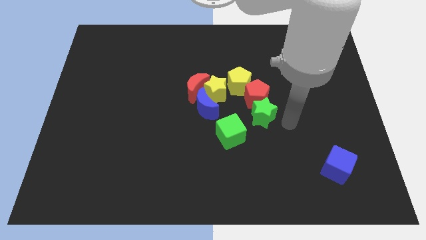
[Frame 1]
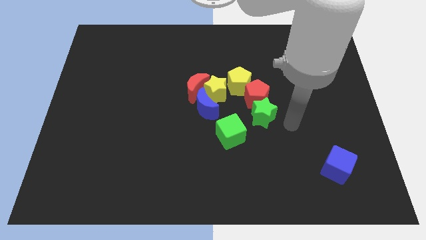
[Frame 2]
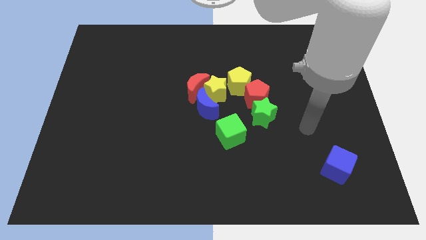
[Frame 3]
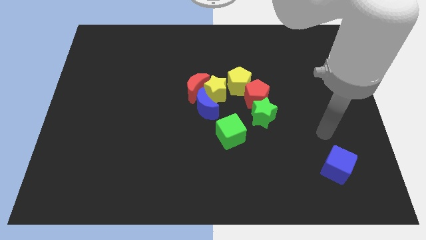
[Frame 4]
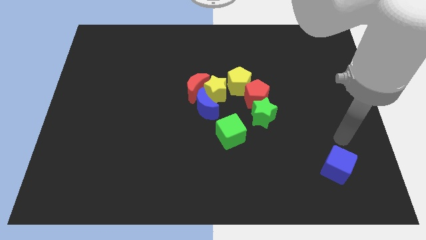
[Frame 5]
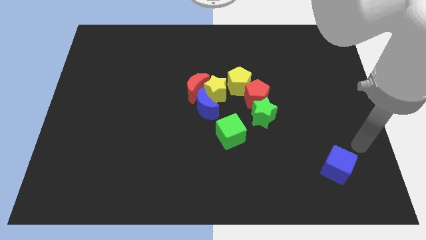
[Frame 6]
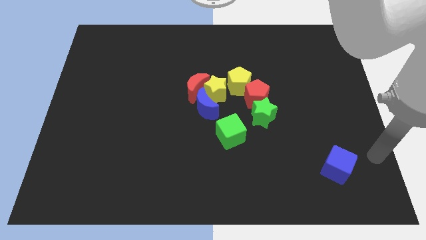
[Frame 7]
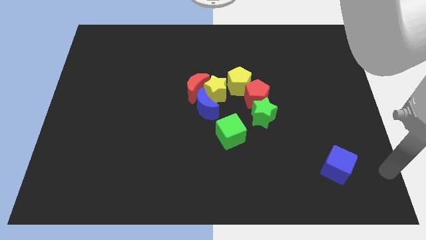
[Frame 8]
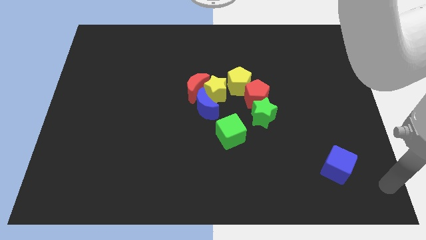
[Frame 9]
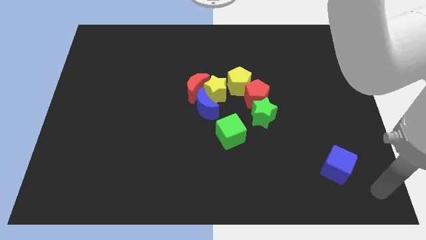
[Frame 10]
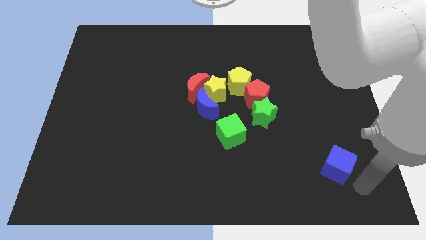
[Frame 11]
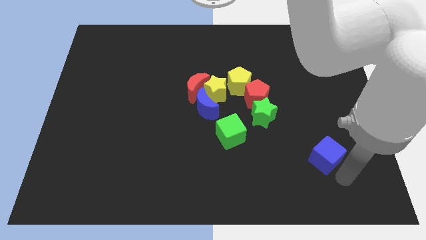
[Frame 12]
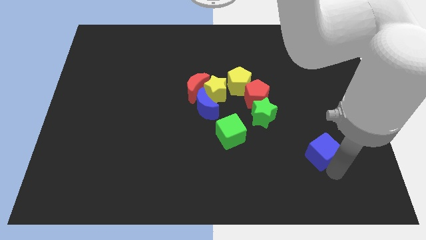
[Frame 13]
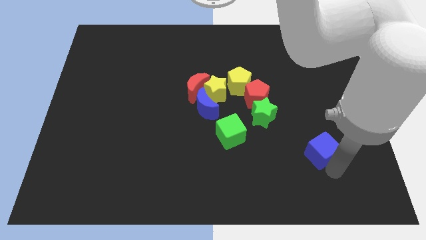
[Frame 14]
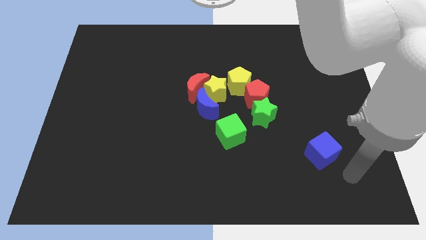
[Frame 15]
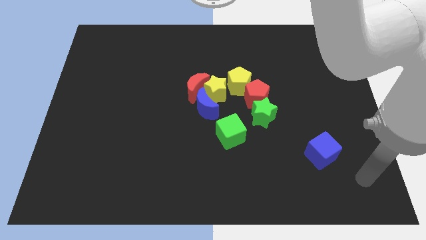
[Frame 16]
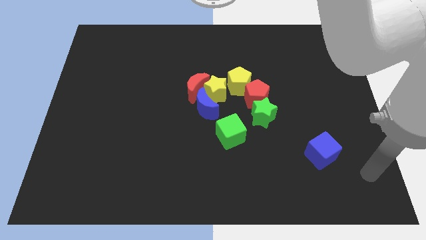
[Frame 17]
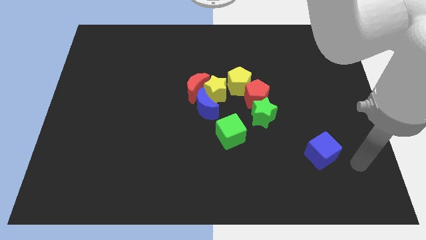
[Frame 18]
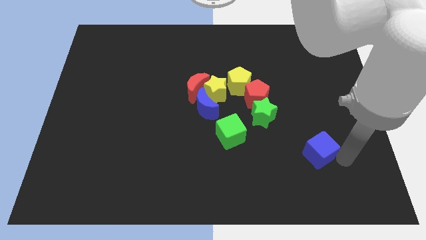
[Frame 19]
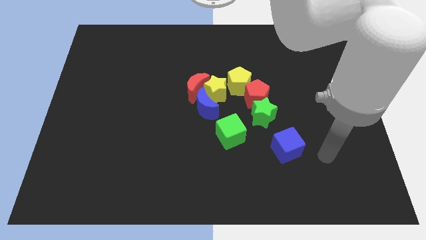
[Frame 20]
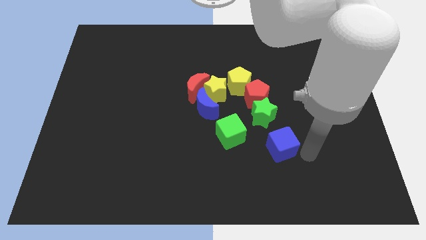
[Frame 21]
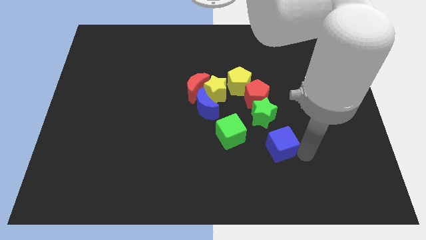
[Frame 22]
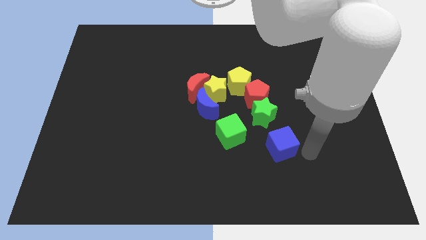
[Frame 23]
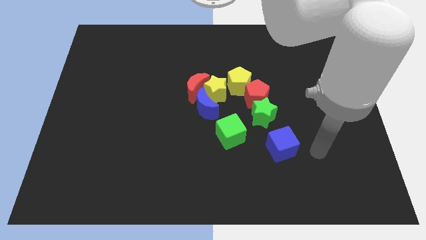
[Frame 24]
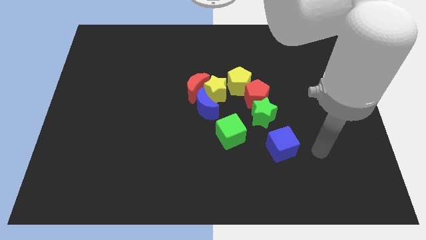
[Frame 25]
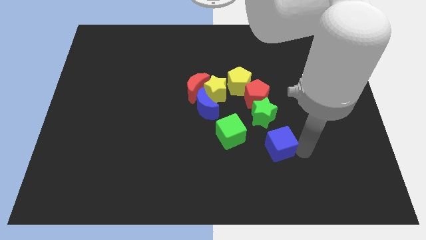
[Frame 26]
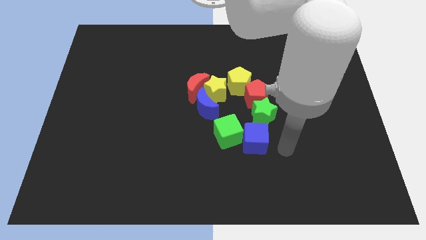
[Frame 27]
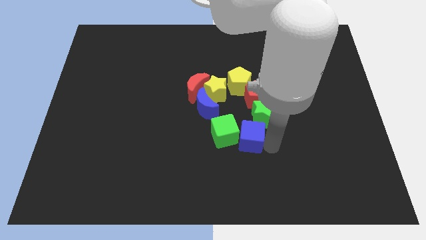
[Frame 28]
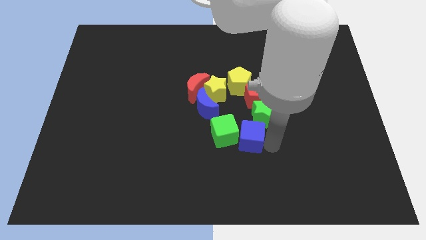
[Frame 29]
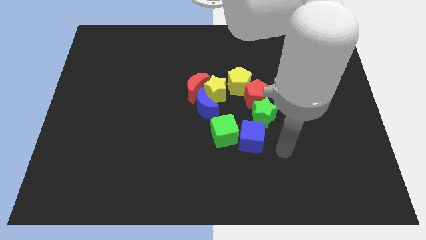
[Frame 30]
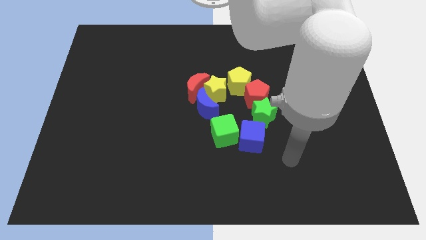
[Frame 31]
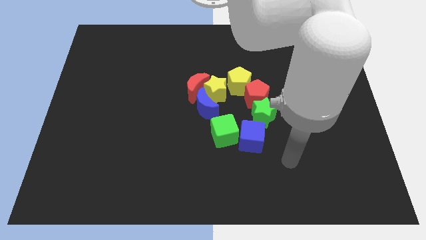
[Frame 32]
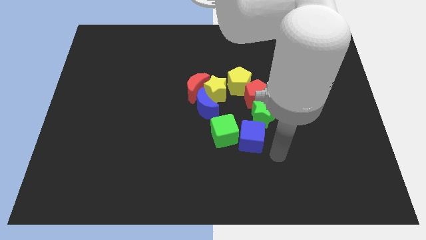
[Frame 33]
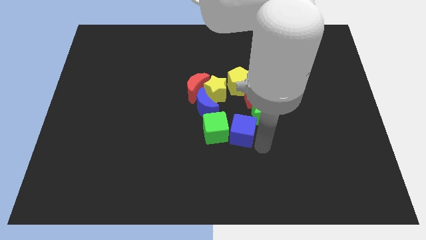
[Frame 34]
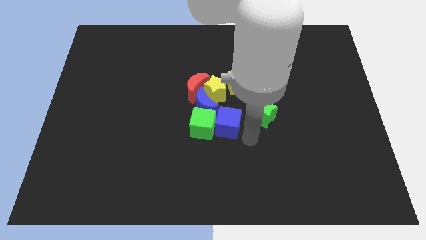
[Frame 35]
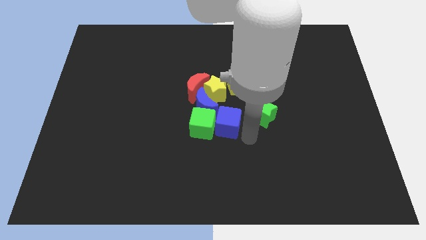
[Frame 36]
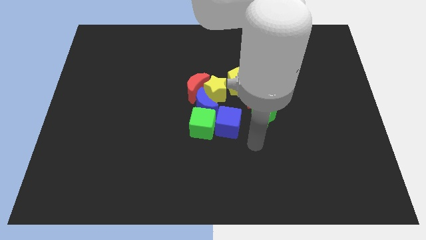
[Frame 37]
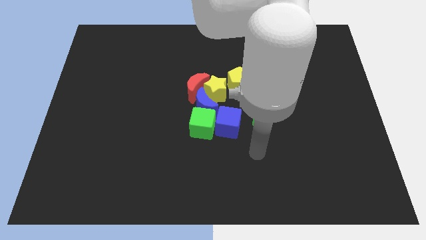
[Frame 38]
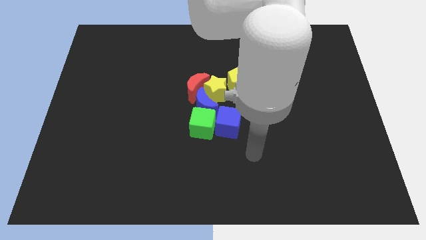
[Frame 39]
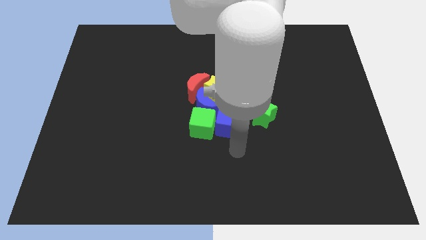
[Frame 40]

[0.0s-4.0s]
move the blue cube to the bottom right of the blue crescent

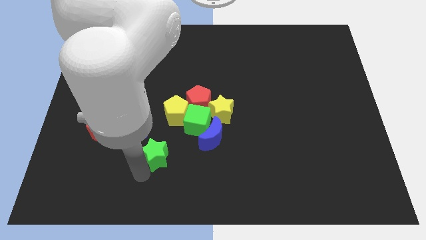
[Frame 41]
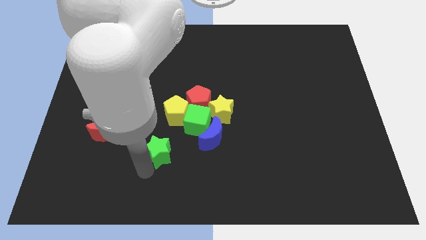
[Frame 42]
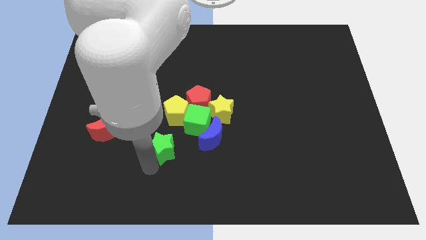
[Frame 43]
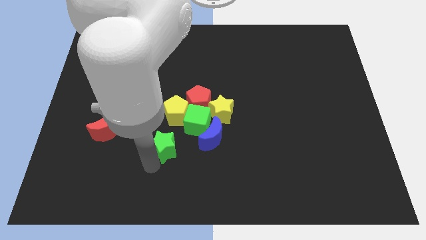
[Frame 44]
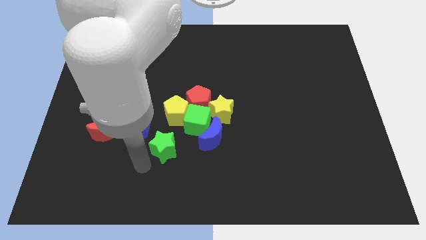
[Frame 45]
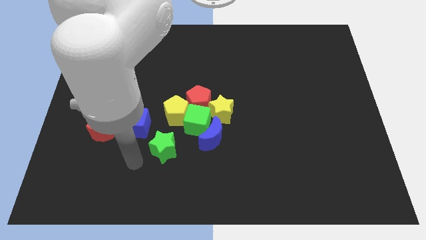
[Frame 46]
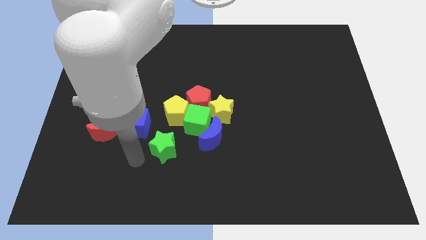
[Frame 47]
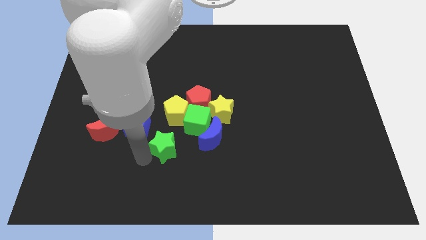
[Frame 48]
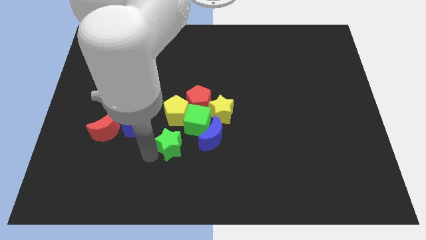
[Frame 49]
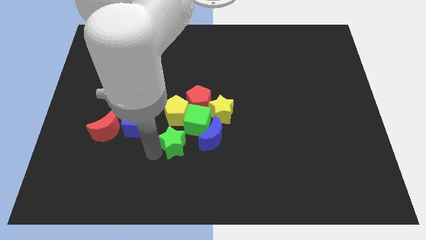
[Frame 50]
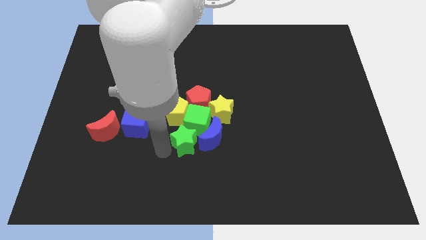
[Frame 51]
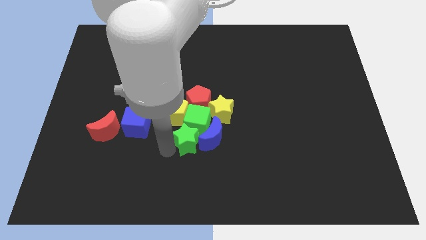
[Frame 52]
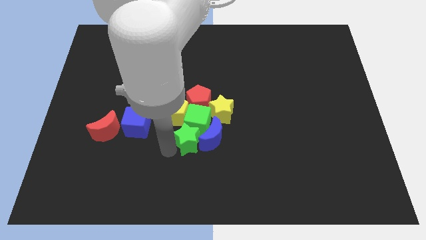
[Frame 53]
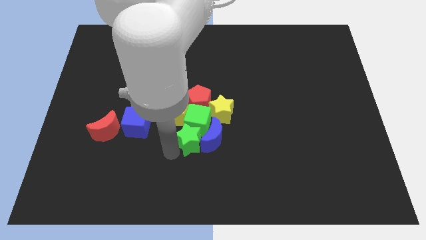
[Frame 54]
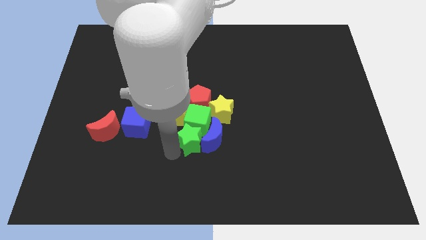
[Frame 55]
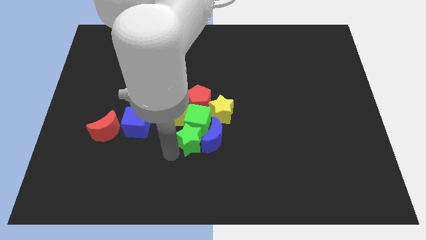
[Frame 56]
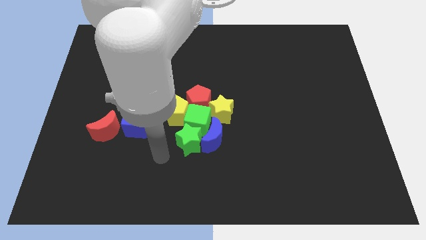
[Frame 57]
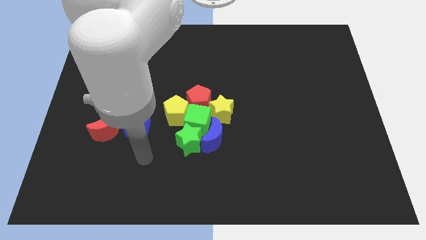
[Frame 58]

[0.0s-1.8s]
place the green star into the blue moon

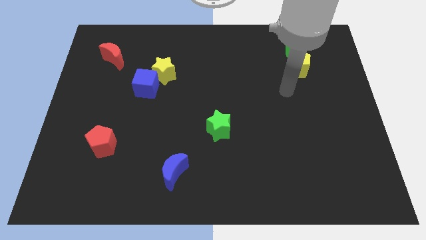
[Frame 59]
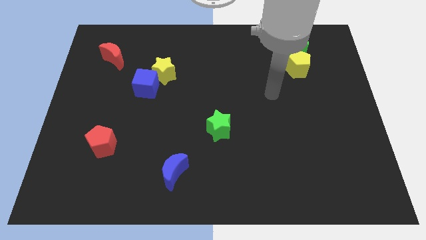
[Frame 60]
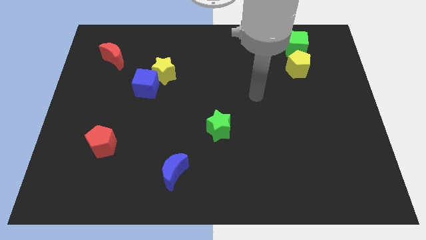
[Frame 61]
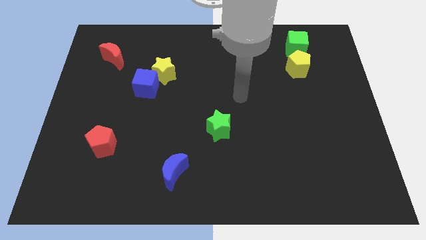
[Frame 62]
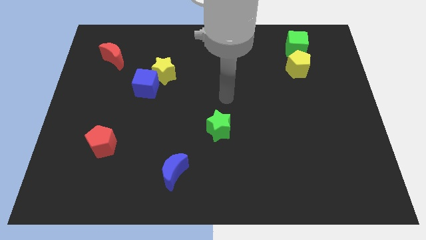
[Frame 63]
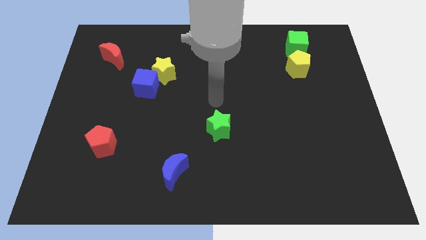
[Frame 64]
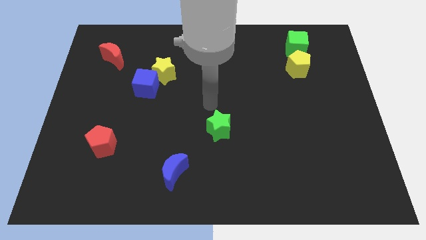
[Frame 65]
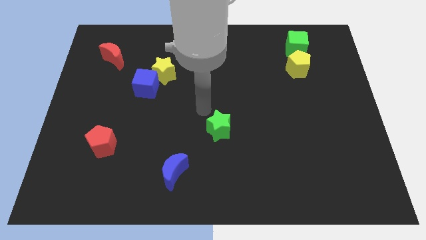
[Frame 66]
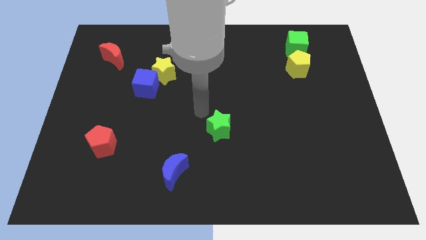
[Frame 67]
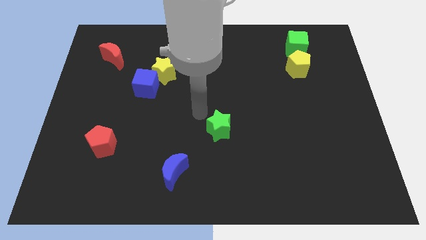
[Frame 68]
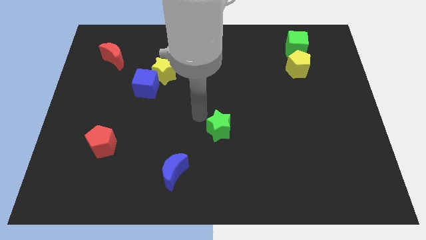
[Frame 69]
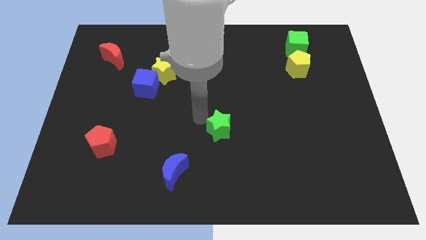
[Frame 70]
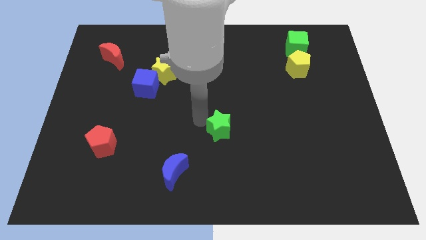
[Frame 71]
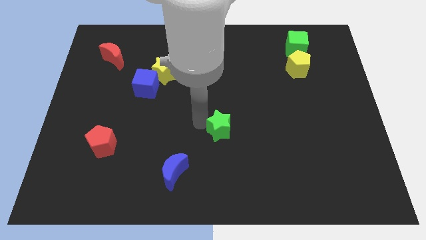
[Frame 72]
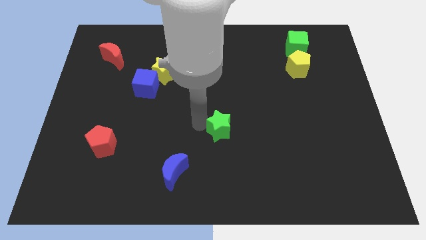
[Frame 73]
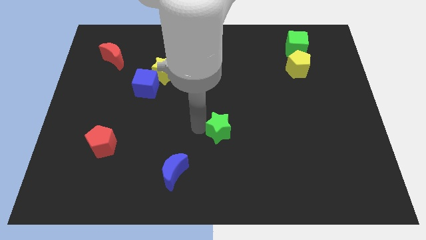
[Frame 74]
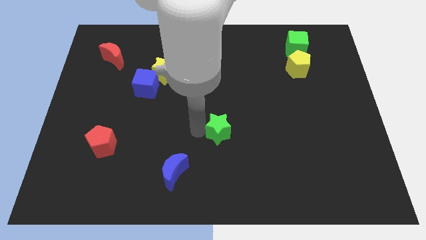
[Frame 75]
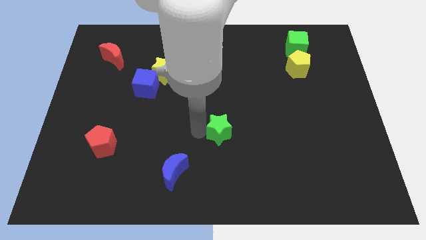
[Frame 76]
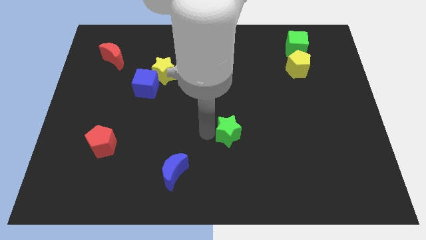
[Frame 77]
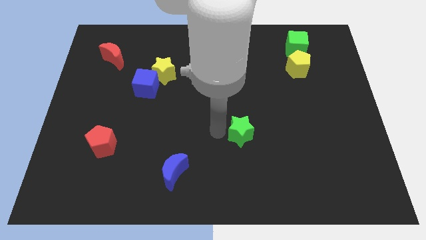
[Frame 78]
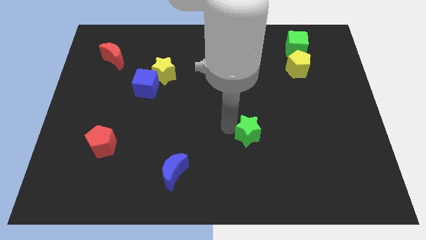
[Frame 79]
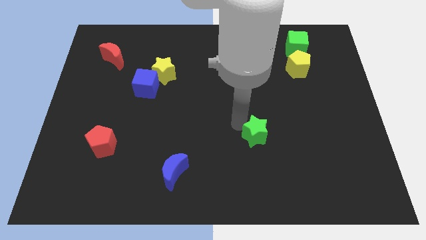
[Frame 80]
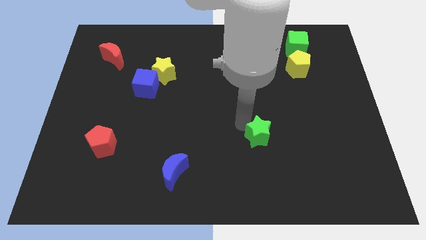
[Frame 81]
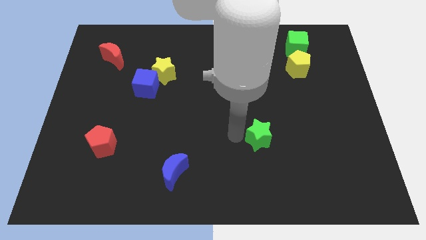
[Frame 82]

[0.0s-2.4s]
drag the green star to the right side

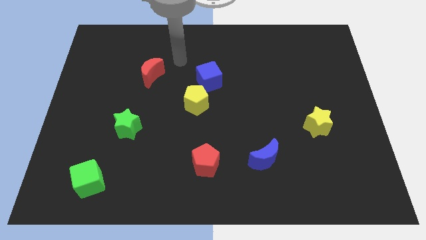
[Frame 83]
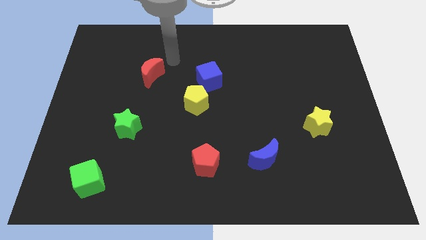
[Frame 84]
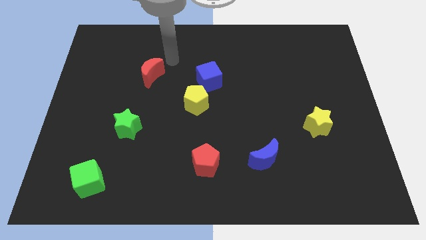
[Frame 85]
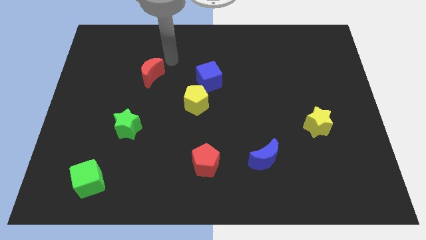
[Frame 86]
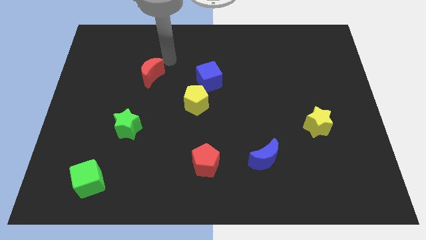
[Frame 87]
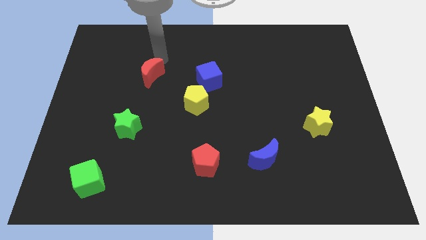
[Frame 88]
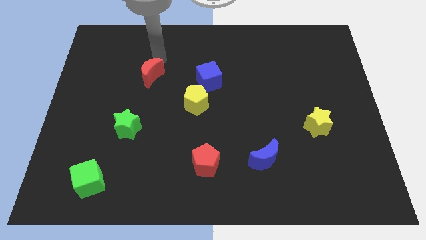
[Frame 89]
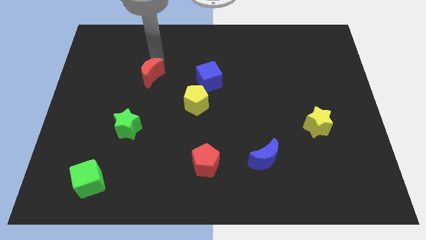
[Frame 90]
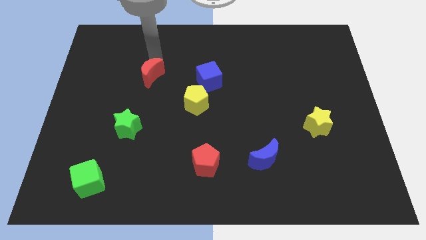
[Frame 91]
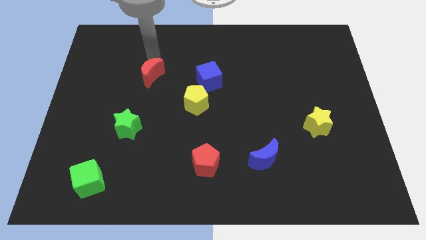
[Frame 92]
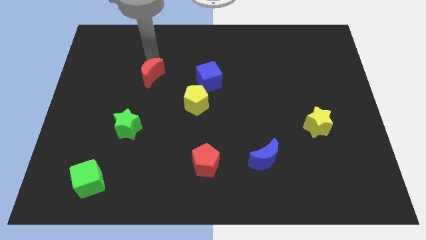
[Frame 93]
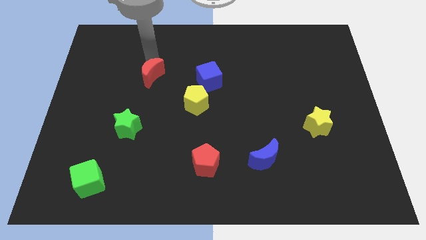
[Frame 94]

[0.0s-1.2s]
place the arm near the red moon
